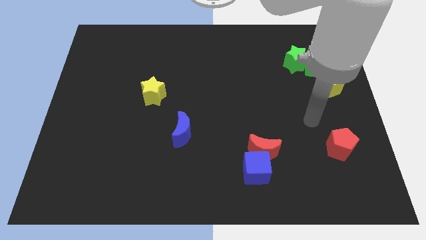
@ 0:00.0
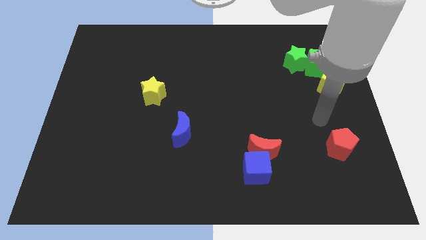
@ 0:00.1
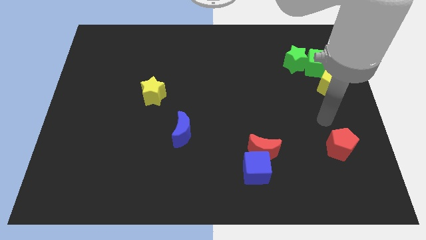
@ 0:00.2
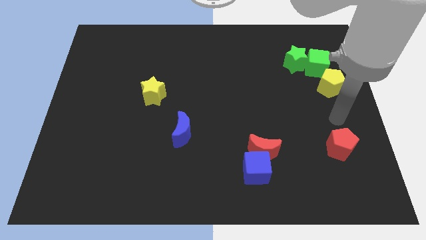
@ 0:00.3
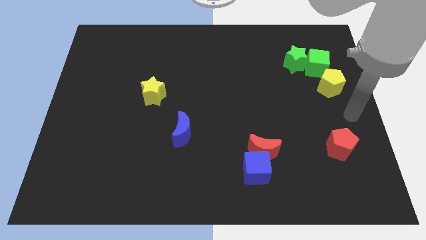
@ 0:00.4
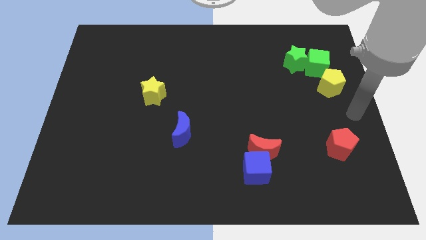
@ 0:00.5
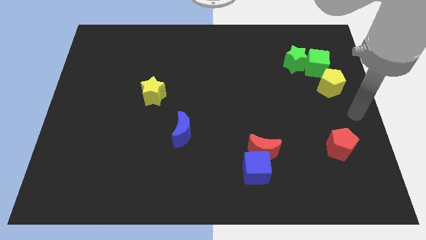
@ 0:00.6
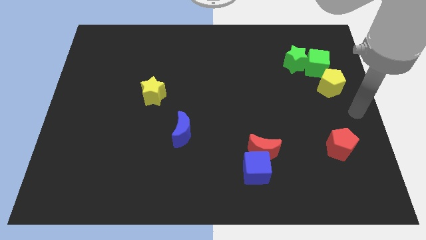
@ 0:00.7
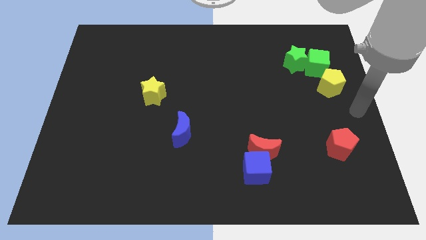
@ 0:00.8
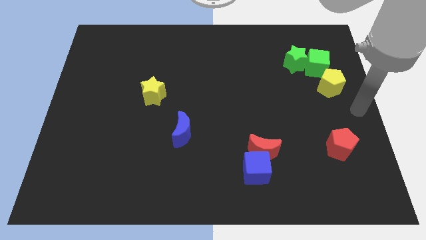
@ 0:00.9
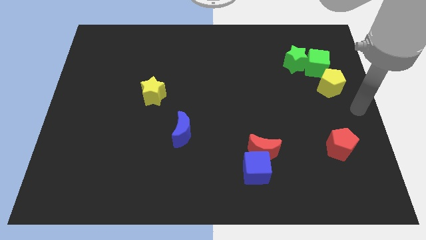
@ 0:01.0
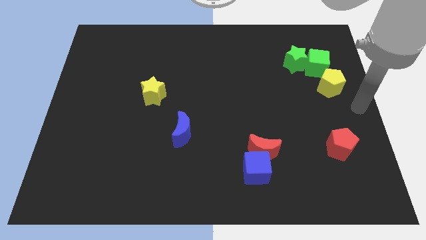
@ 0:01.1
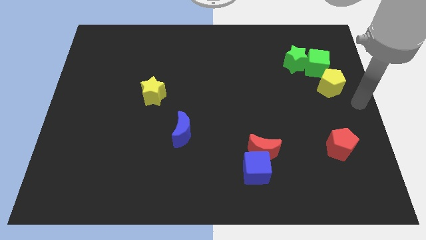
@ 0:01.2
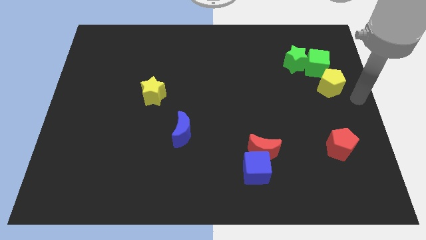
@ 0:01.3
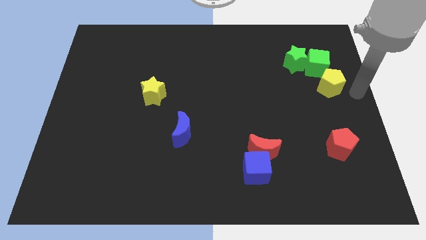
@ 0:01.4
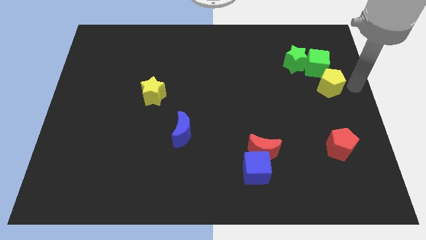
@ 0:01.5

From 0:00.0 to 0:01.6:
place your arm at the right side of the yellow pentagon

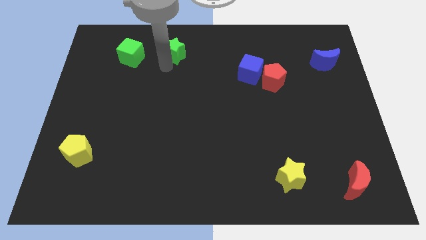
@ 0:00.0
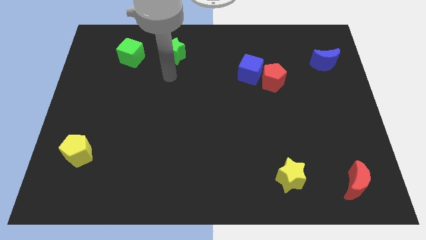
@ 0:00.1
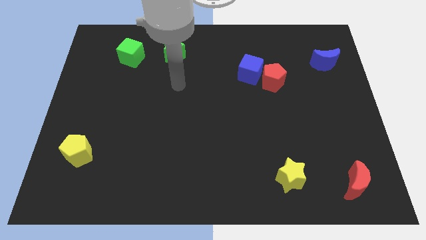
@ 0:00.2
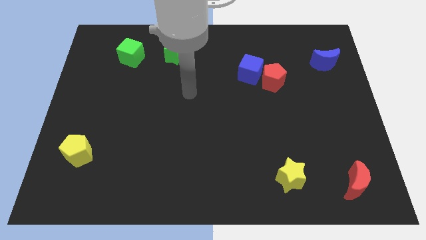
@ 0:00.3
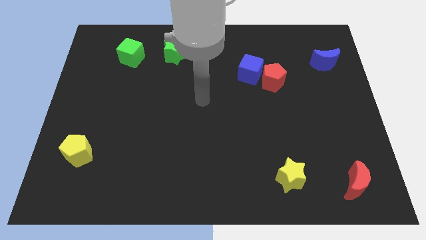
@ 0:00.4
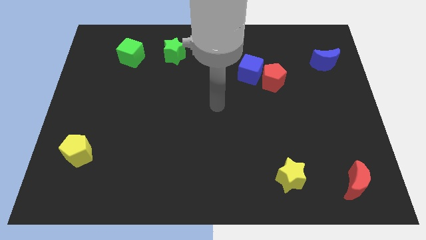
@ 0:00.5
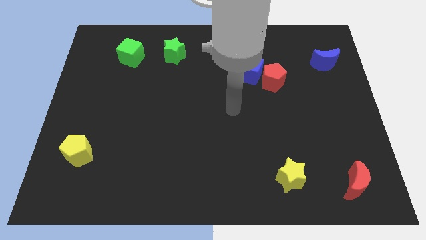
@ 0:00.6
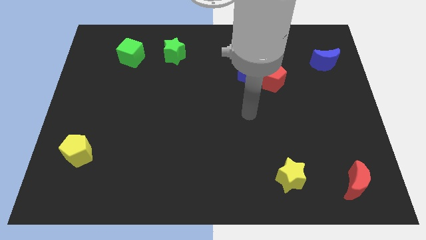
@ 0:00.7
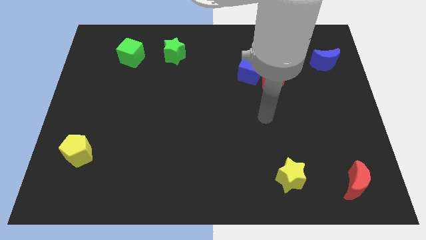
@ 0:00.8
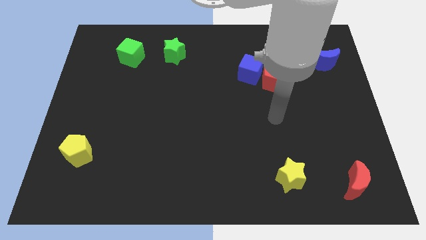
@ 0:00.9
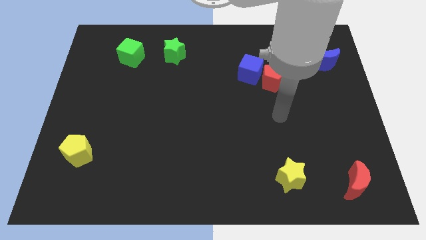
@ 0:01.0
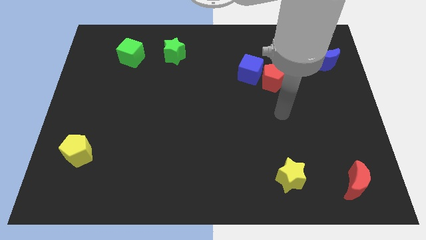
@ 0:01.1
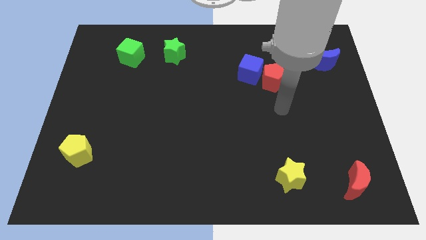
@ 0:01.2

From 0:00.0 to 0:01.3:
move your arm away from the green star

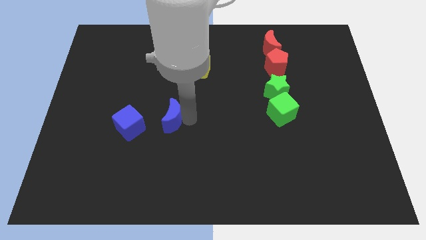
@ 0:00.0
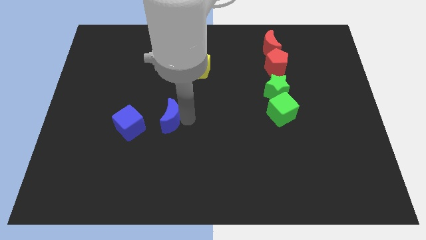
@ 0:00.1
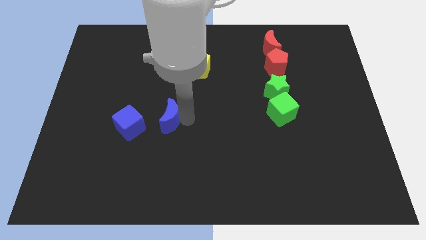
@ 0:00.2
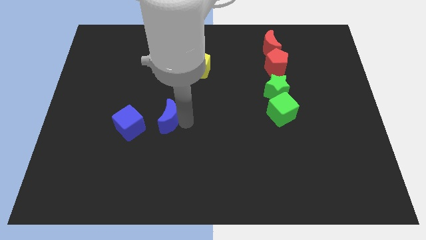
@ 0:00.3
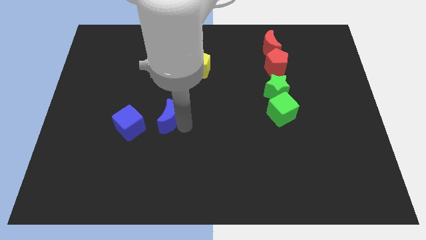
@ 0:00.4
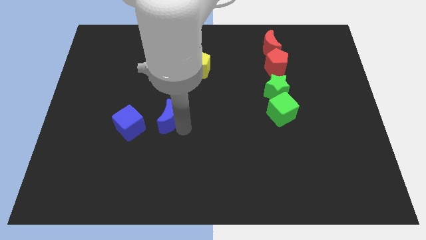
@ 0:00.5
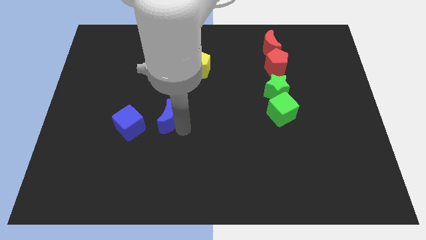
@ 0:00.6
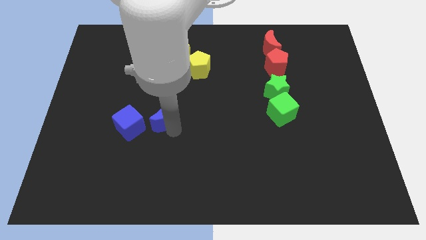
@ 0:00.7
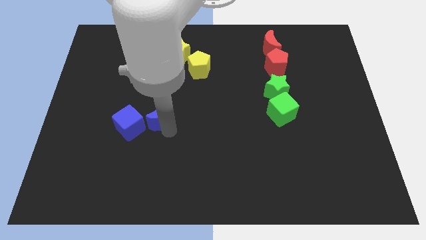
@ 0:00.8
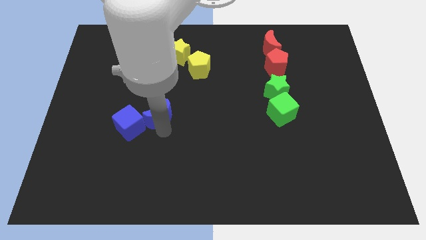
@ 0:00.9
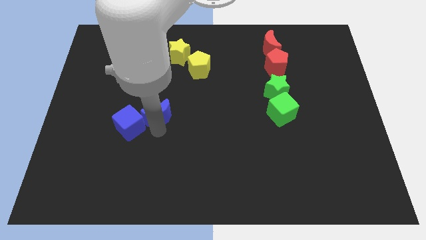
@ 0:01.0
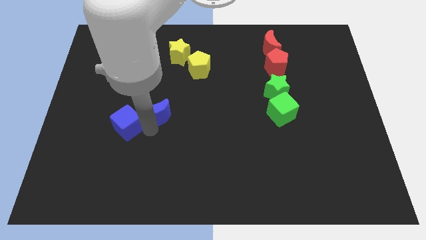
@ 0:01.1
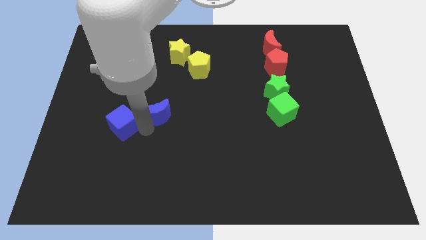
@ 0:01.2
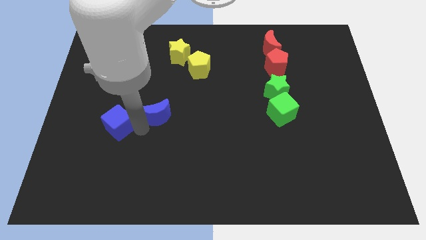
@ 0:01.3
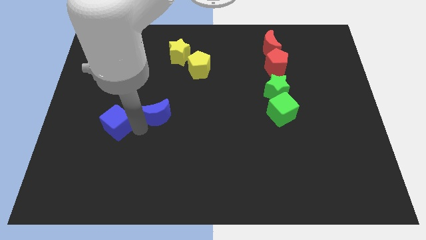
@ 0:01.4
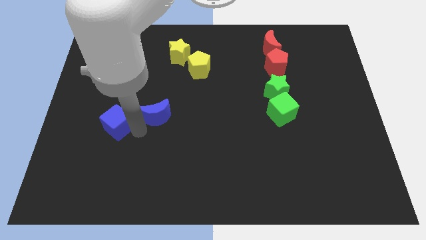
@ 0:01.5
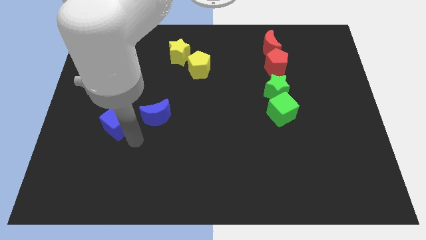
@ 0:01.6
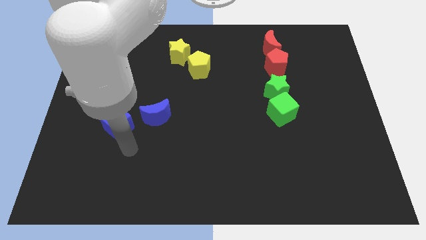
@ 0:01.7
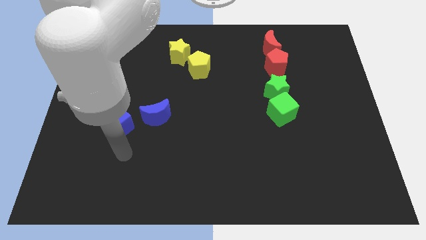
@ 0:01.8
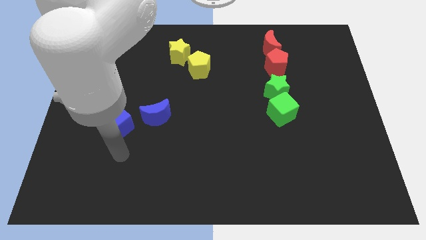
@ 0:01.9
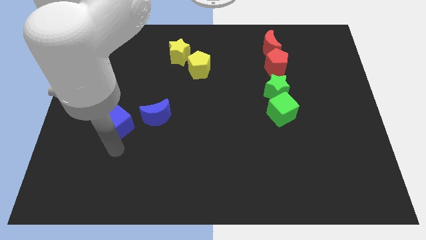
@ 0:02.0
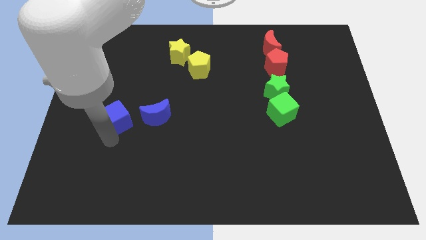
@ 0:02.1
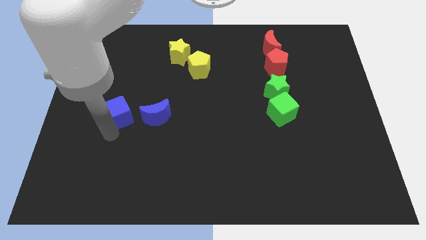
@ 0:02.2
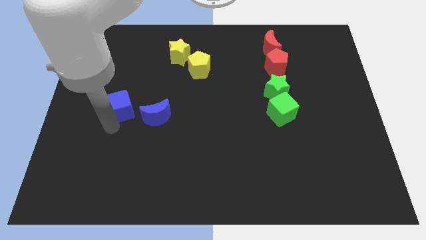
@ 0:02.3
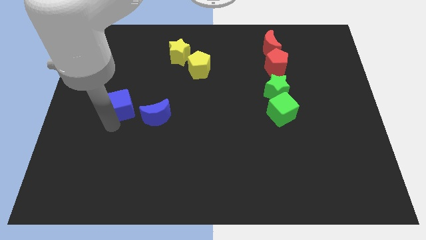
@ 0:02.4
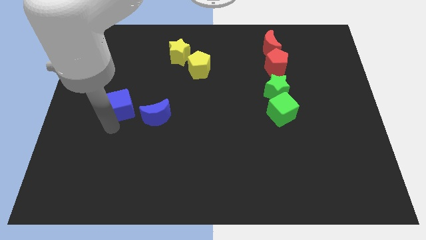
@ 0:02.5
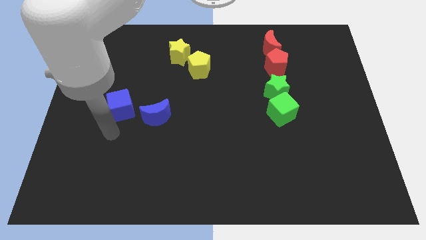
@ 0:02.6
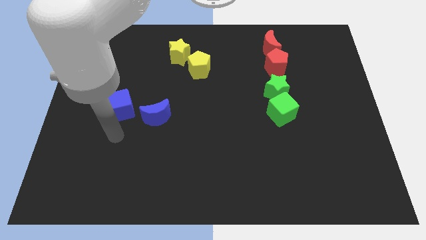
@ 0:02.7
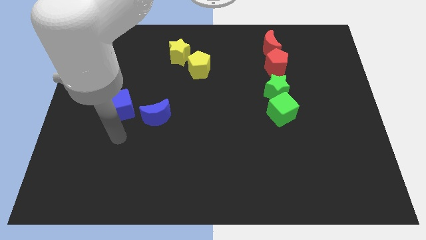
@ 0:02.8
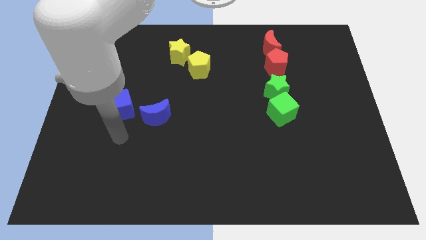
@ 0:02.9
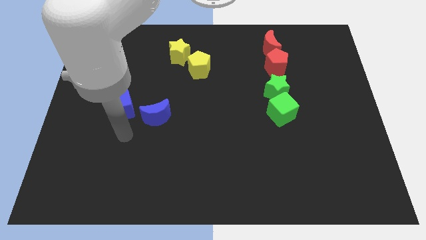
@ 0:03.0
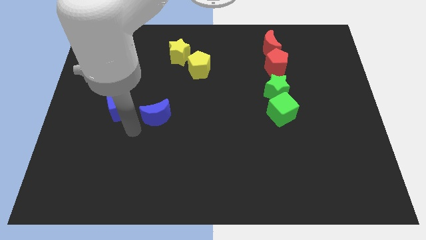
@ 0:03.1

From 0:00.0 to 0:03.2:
place the blue cube parallel left to the blue moon

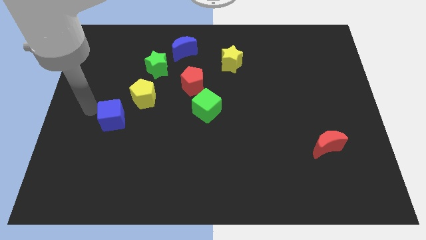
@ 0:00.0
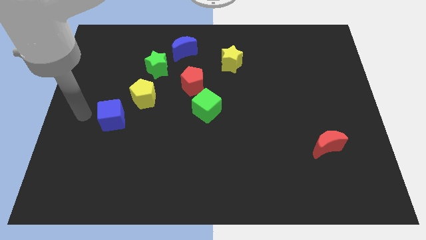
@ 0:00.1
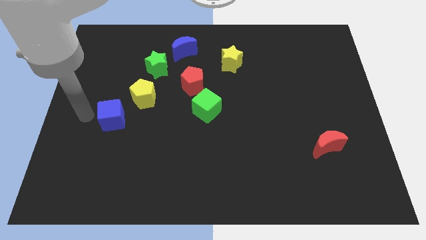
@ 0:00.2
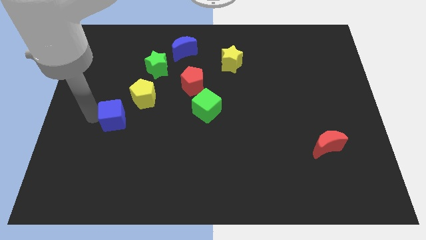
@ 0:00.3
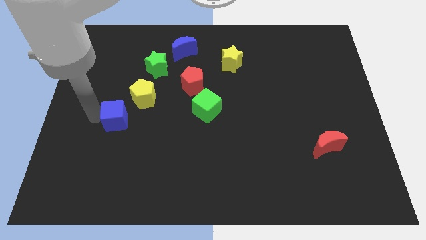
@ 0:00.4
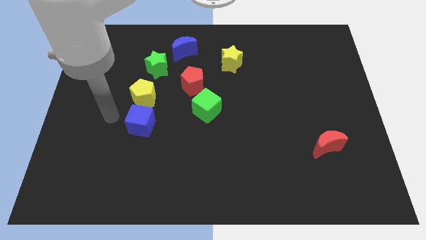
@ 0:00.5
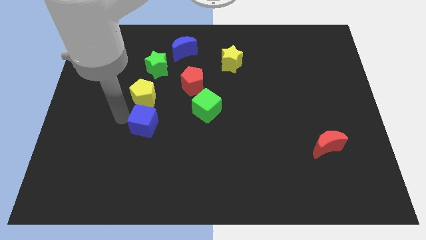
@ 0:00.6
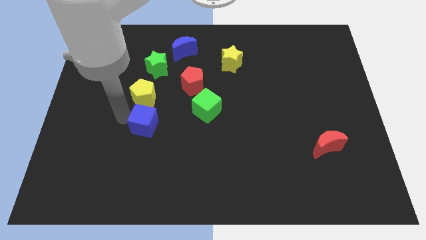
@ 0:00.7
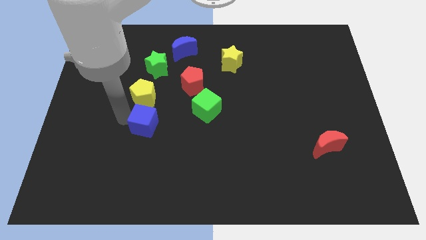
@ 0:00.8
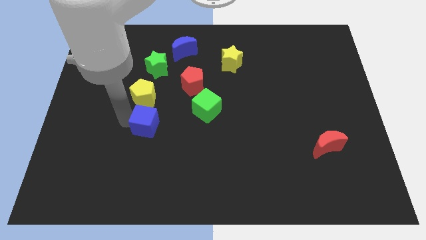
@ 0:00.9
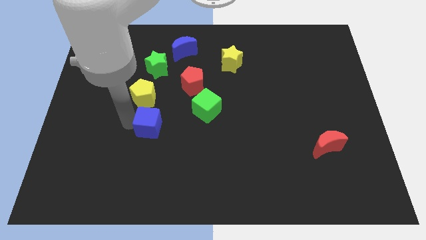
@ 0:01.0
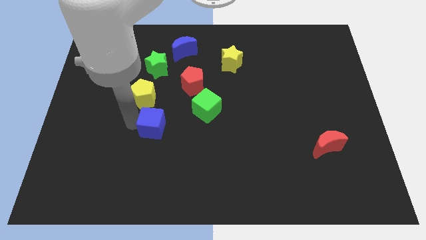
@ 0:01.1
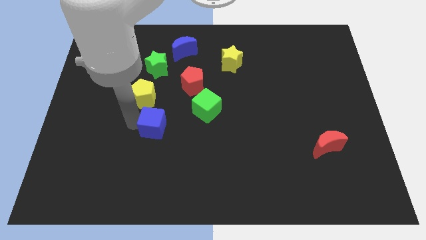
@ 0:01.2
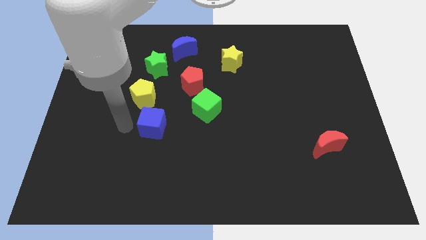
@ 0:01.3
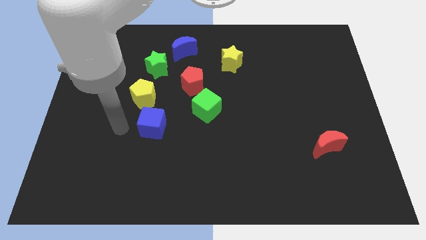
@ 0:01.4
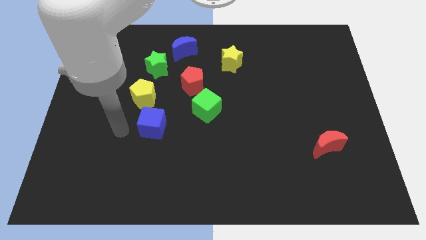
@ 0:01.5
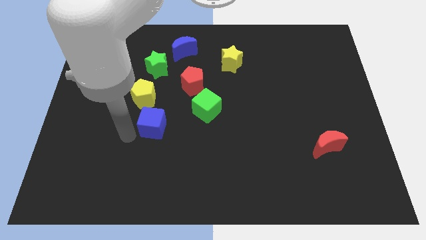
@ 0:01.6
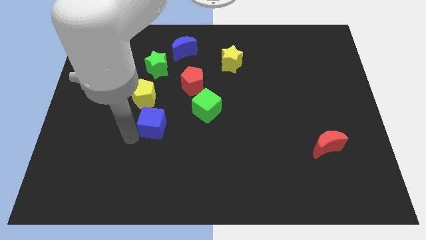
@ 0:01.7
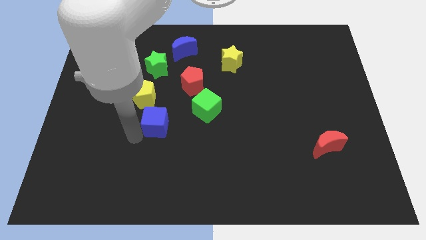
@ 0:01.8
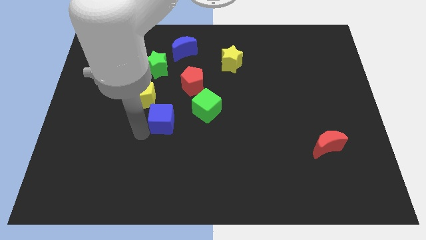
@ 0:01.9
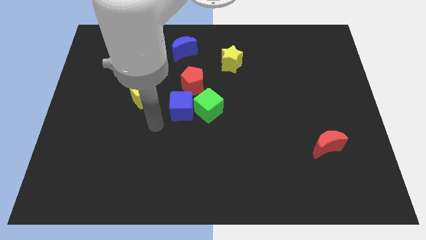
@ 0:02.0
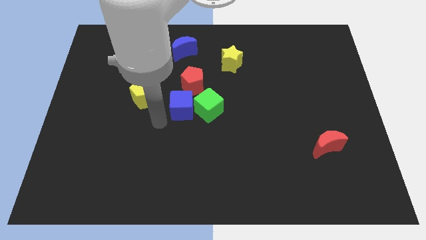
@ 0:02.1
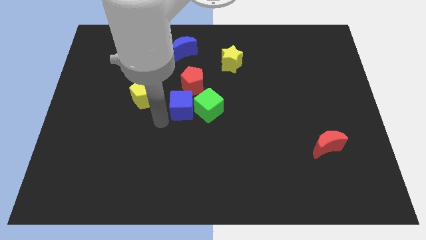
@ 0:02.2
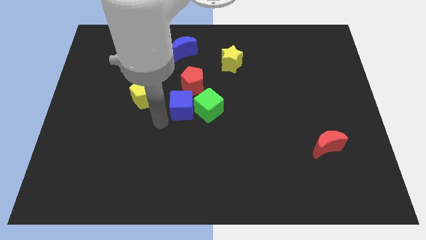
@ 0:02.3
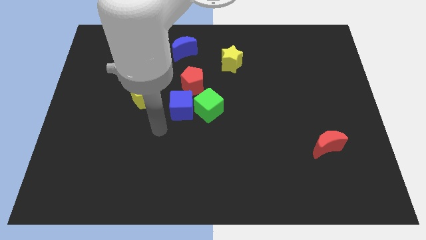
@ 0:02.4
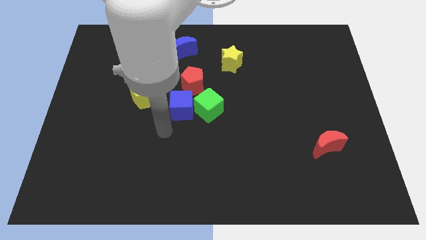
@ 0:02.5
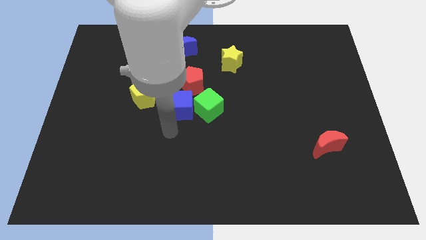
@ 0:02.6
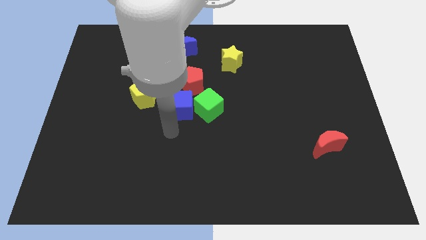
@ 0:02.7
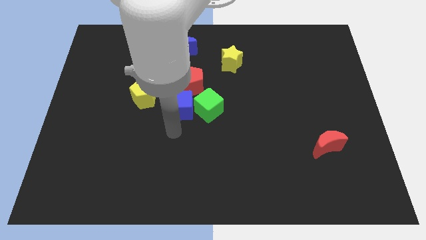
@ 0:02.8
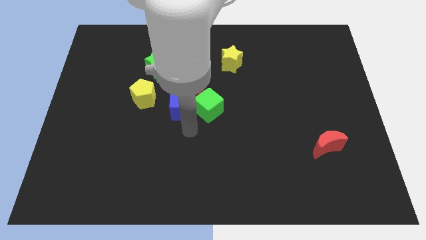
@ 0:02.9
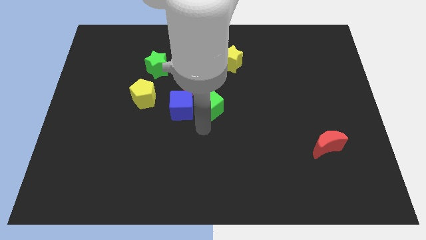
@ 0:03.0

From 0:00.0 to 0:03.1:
place blue cube to the center
